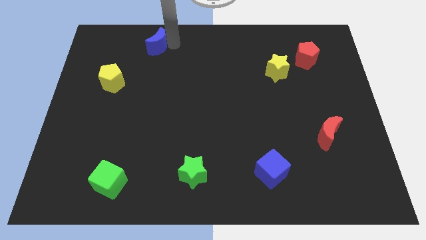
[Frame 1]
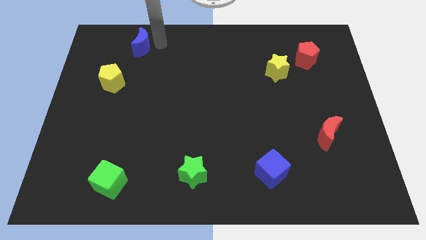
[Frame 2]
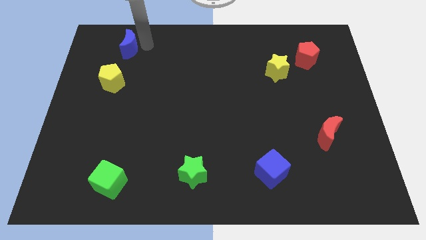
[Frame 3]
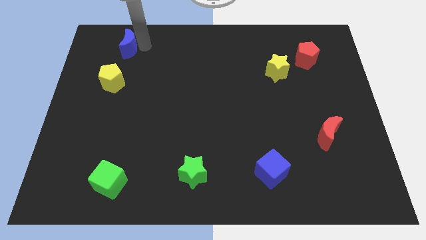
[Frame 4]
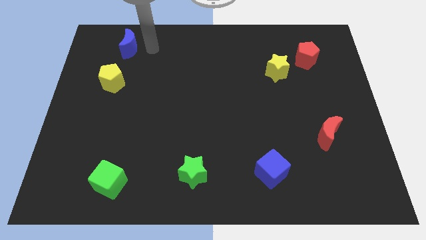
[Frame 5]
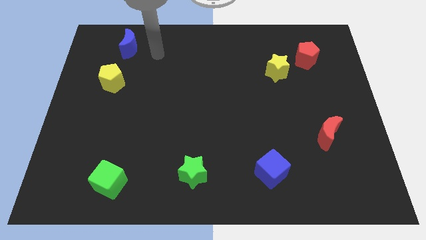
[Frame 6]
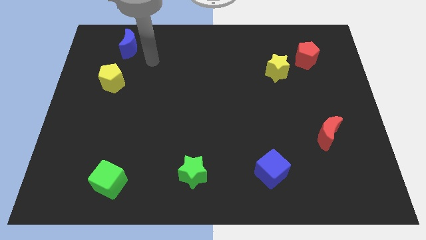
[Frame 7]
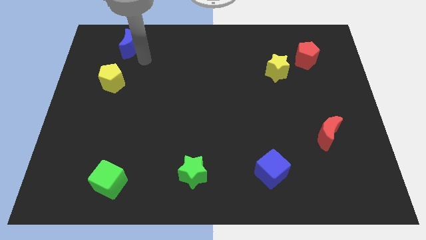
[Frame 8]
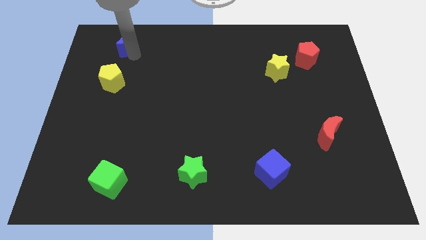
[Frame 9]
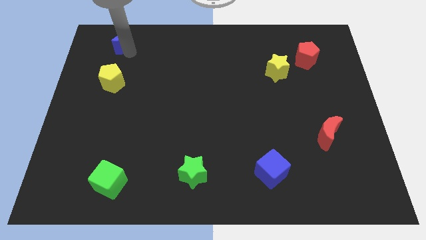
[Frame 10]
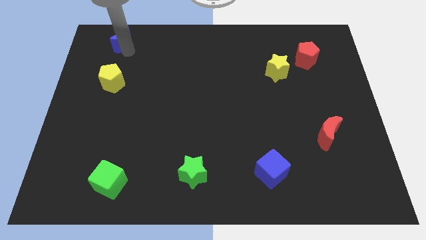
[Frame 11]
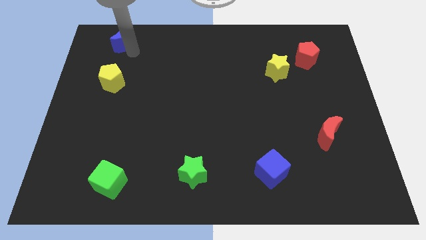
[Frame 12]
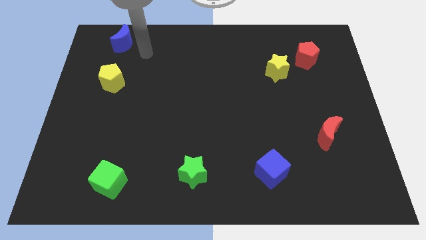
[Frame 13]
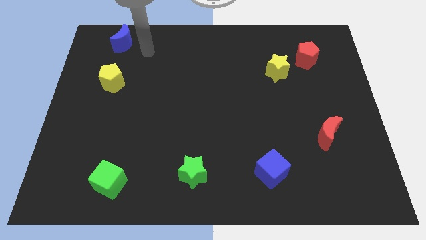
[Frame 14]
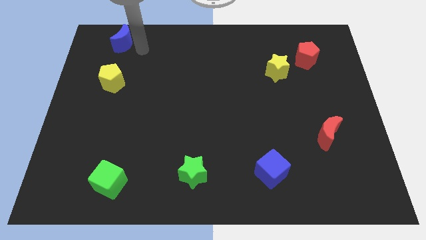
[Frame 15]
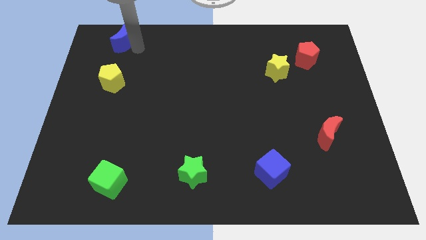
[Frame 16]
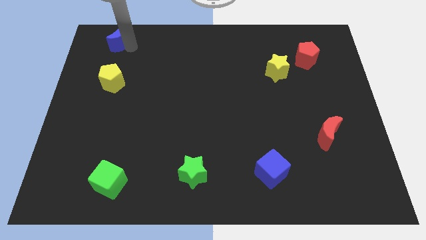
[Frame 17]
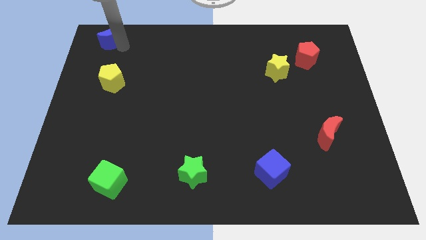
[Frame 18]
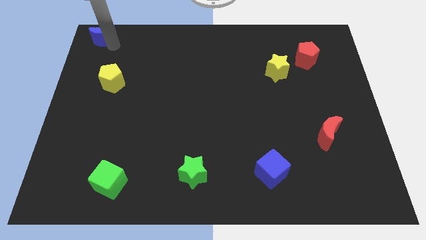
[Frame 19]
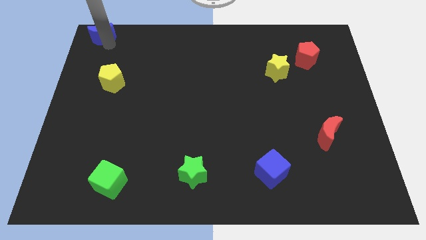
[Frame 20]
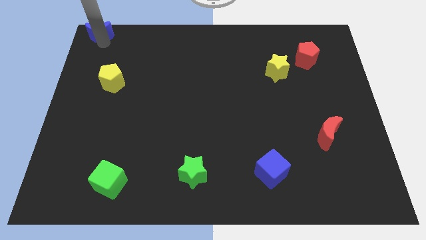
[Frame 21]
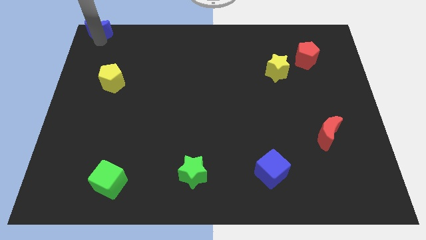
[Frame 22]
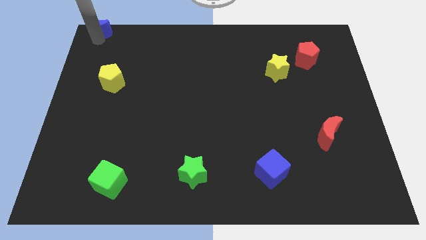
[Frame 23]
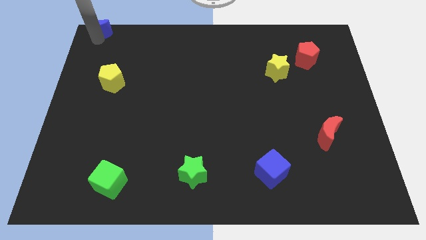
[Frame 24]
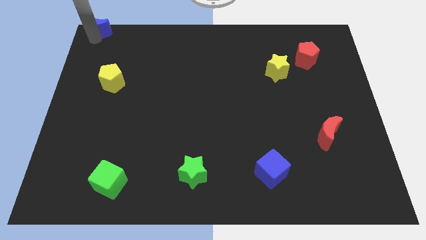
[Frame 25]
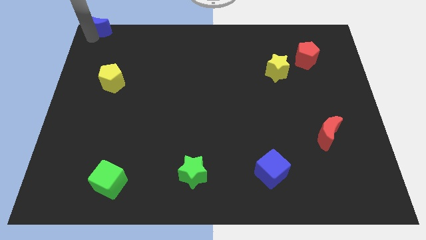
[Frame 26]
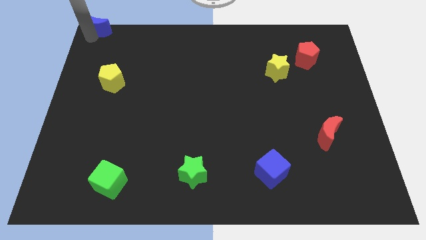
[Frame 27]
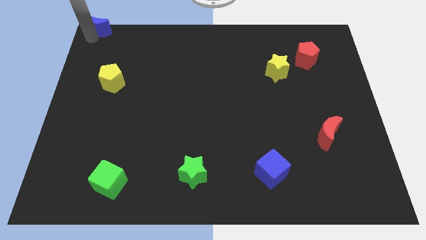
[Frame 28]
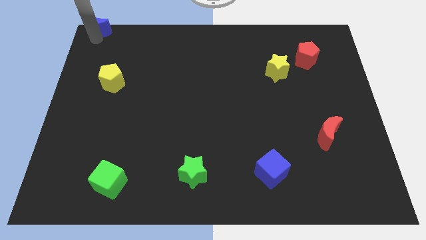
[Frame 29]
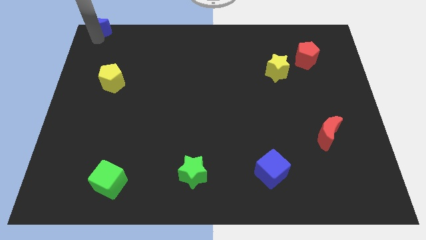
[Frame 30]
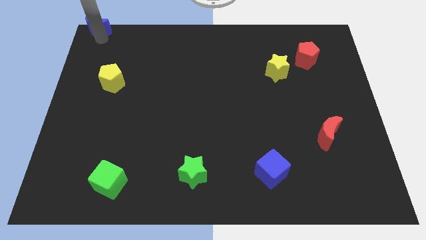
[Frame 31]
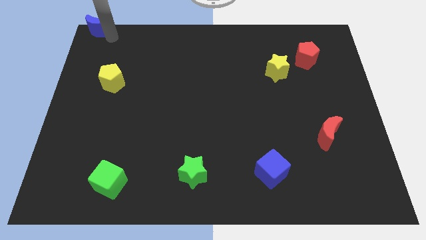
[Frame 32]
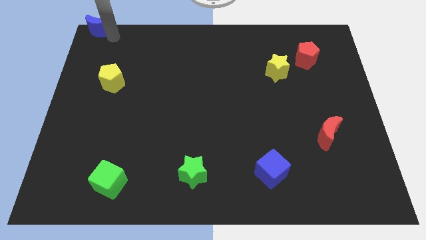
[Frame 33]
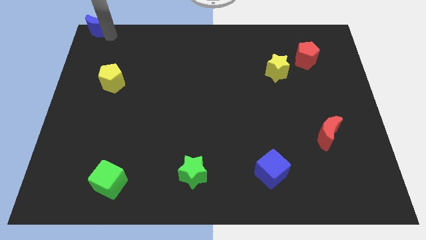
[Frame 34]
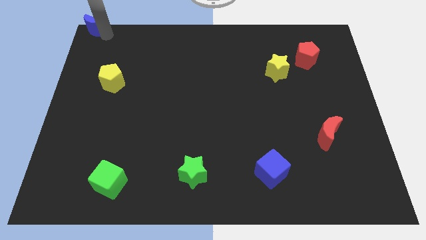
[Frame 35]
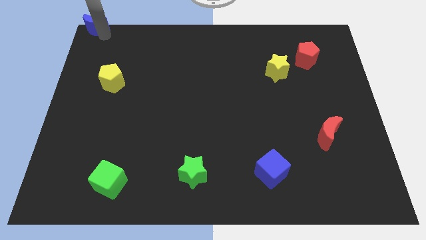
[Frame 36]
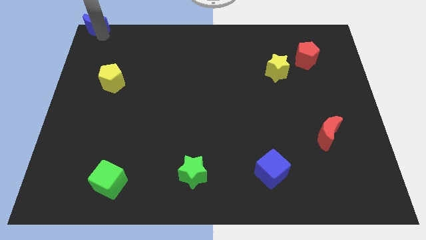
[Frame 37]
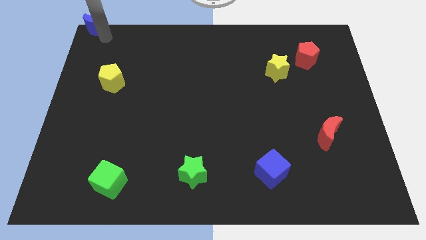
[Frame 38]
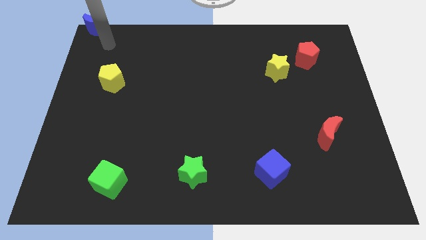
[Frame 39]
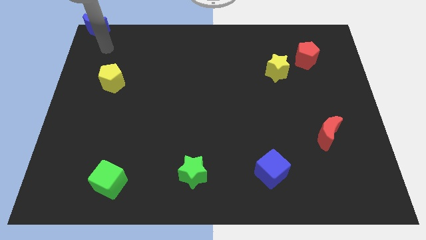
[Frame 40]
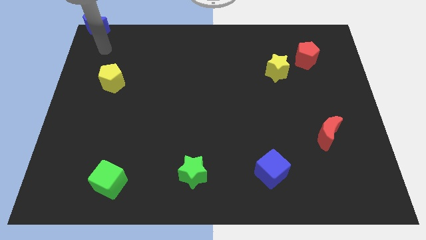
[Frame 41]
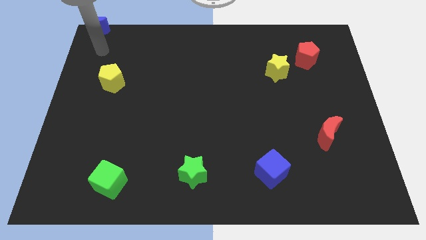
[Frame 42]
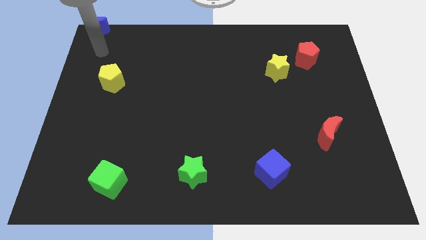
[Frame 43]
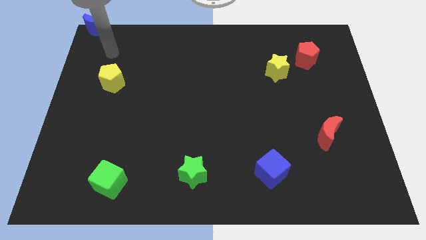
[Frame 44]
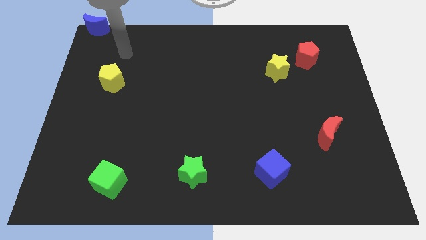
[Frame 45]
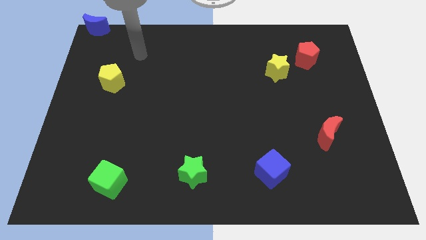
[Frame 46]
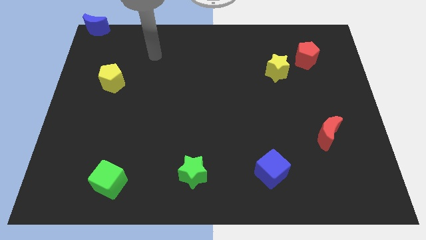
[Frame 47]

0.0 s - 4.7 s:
place blue moon to the left top corner of the board

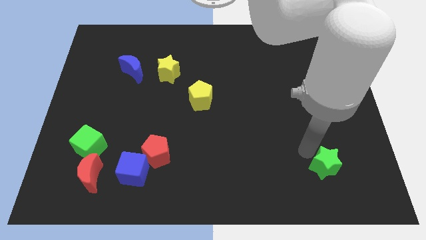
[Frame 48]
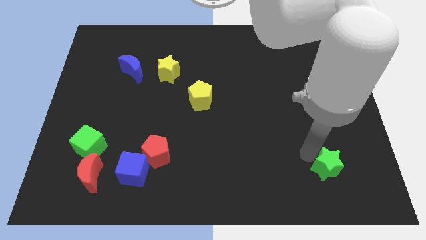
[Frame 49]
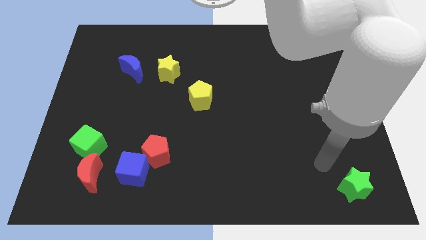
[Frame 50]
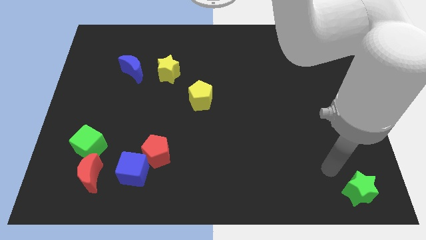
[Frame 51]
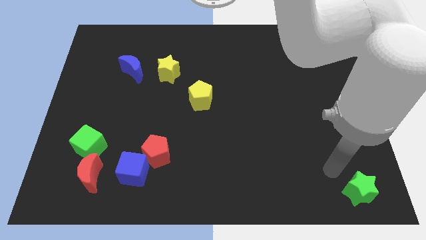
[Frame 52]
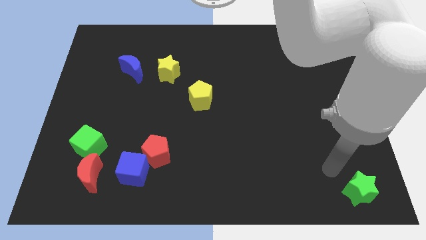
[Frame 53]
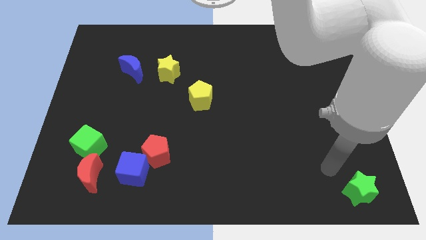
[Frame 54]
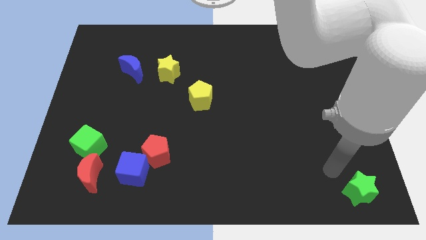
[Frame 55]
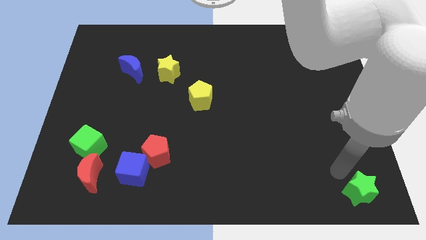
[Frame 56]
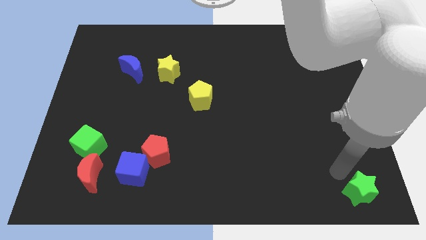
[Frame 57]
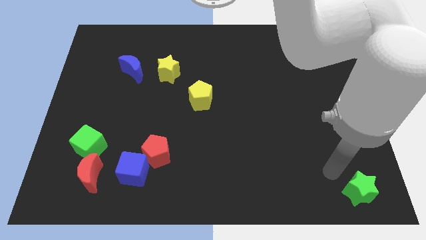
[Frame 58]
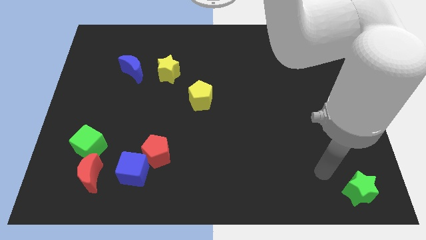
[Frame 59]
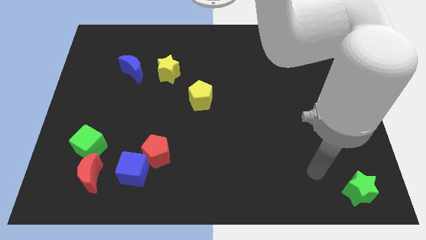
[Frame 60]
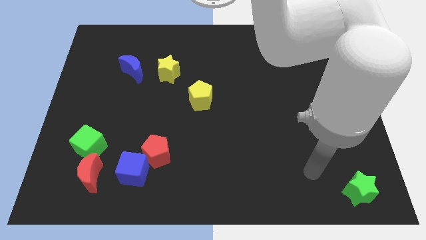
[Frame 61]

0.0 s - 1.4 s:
move the green star to the bottom right of the board

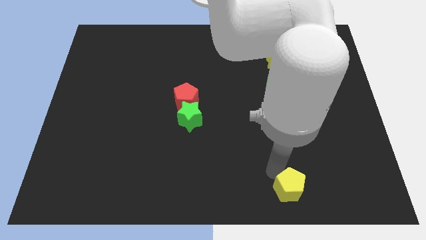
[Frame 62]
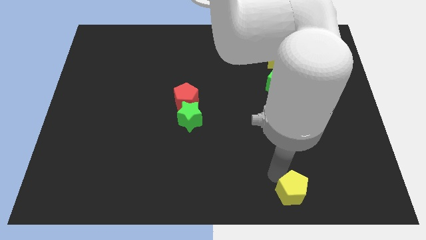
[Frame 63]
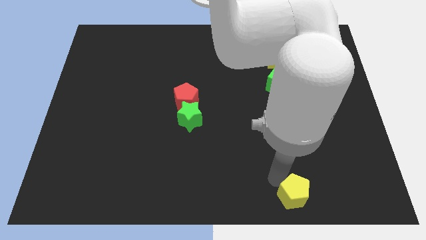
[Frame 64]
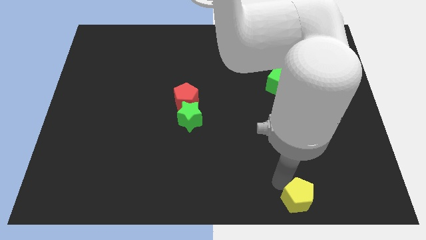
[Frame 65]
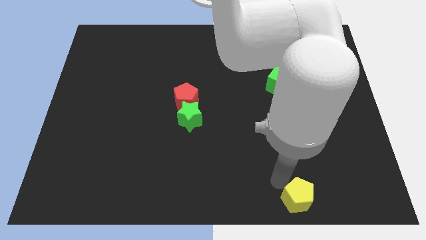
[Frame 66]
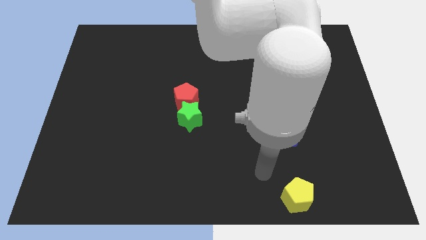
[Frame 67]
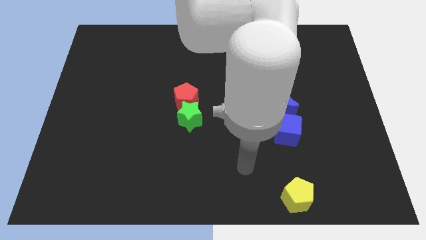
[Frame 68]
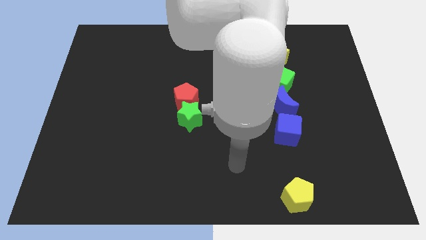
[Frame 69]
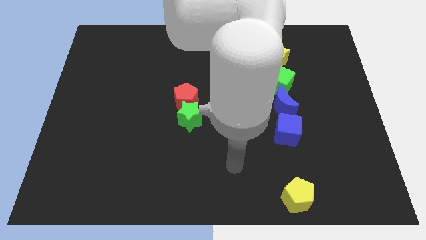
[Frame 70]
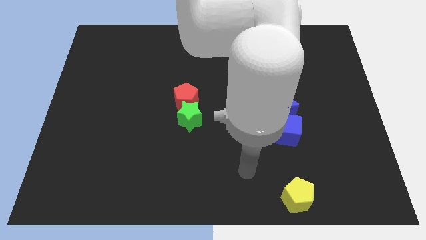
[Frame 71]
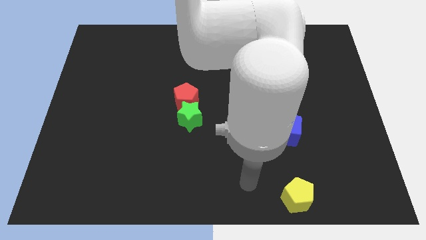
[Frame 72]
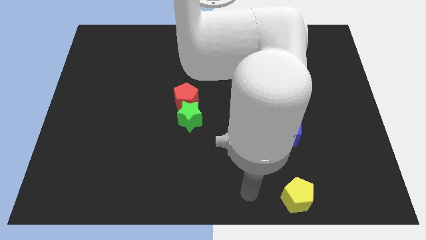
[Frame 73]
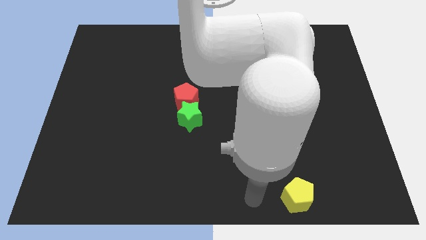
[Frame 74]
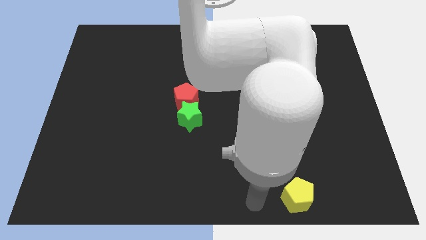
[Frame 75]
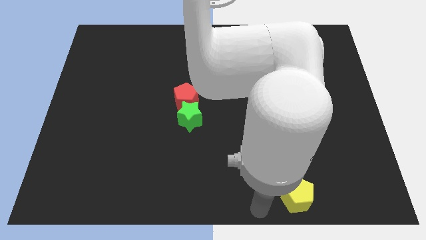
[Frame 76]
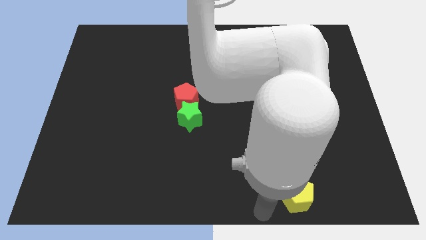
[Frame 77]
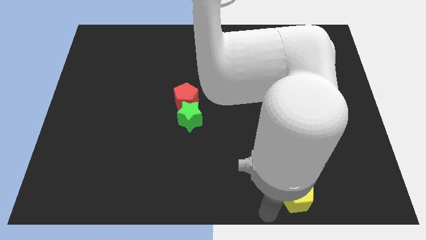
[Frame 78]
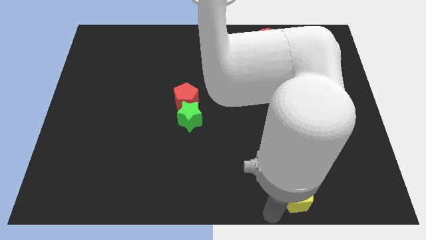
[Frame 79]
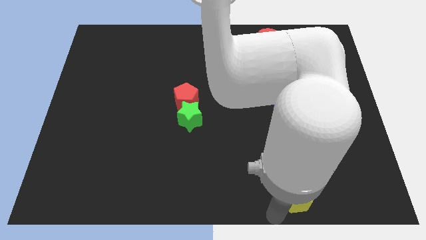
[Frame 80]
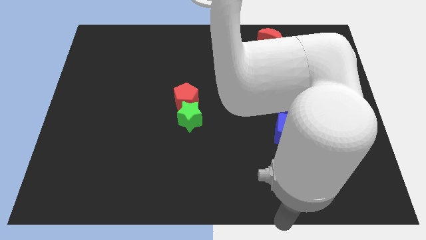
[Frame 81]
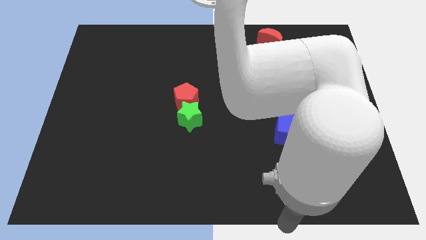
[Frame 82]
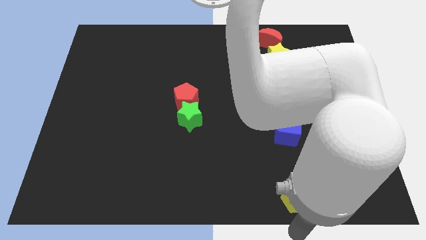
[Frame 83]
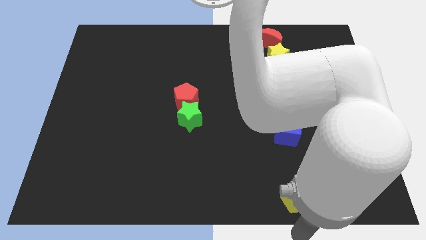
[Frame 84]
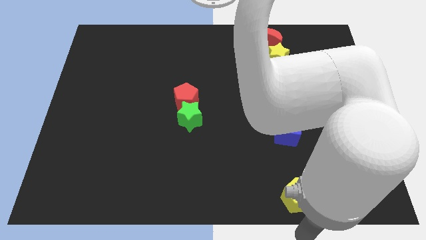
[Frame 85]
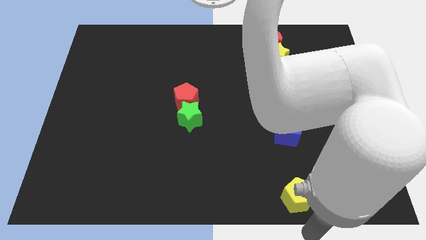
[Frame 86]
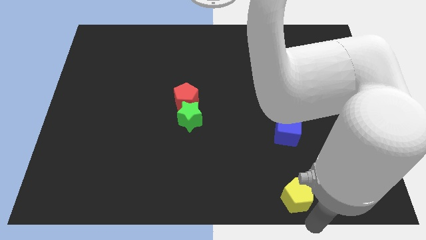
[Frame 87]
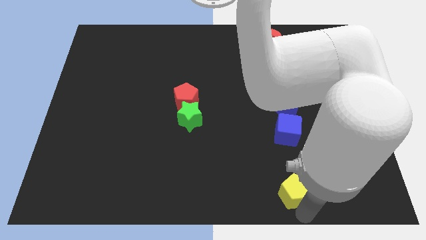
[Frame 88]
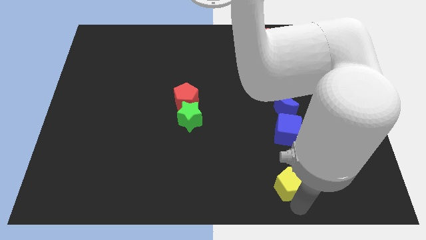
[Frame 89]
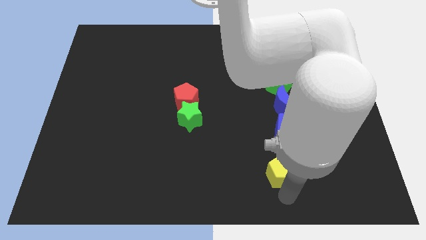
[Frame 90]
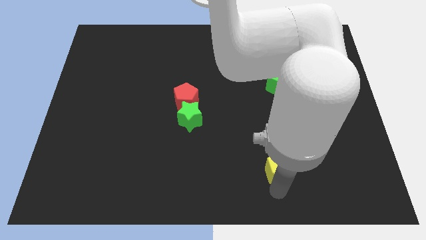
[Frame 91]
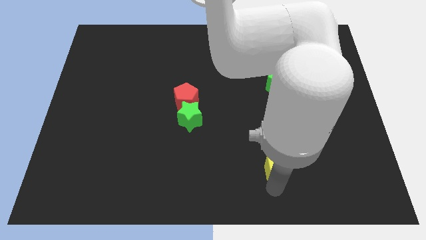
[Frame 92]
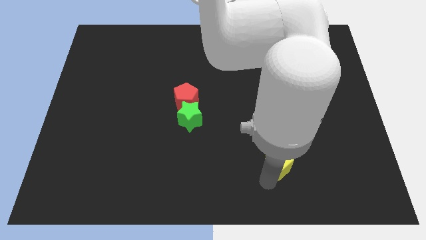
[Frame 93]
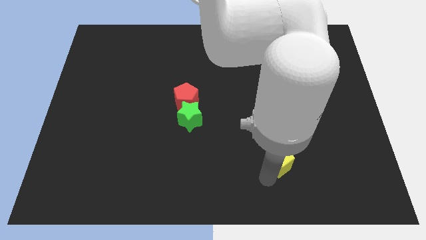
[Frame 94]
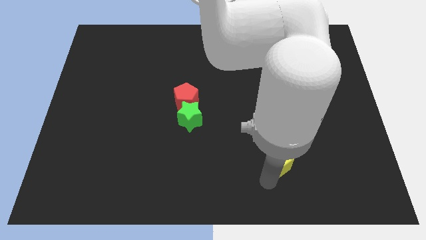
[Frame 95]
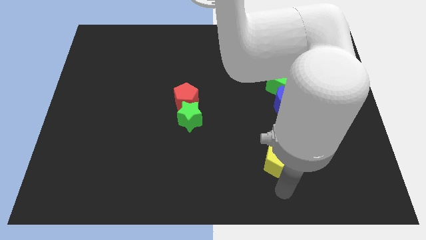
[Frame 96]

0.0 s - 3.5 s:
push the yellow pentagon towards the blue cube
